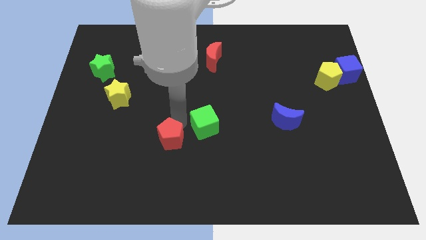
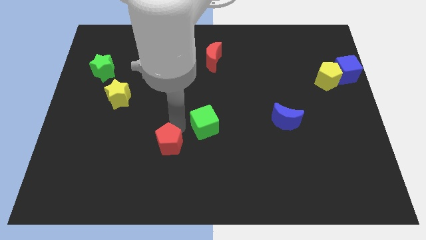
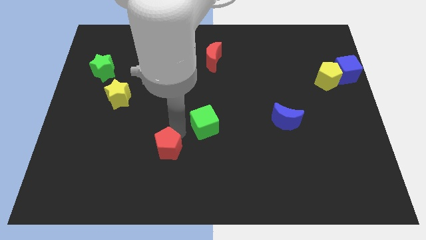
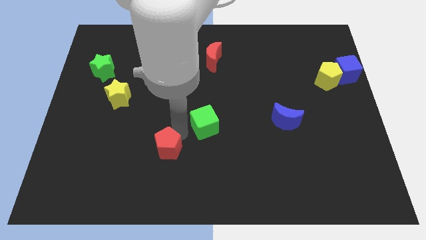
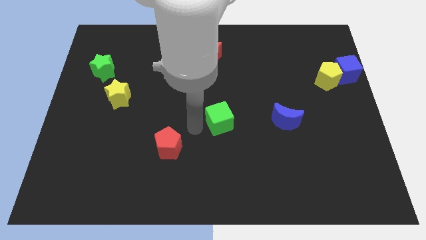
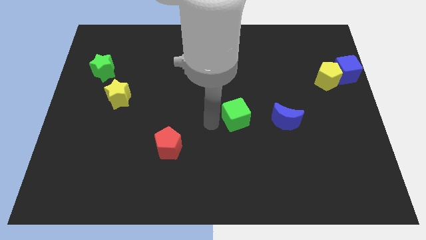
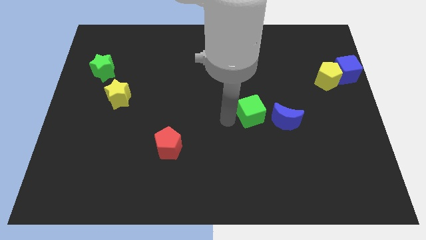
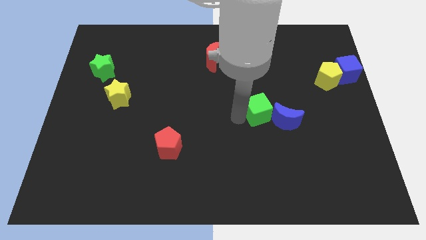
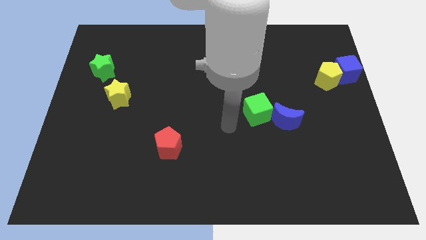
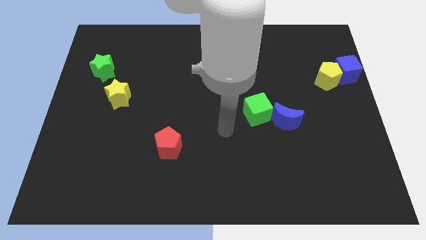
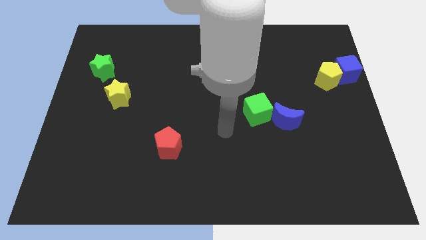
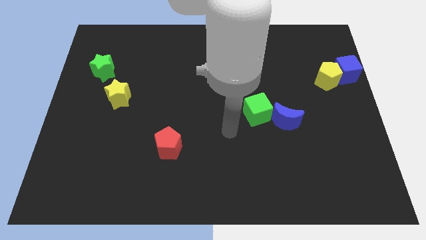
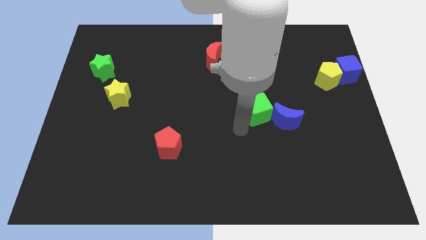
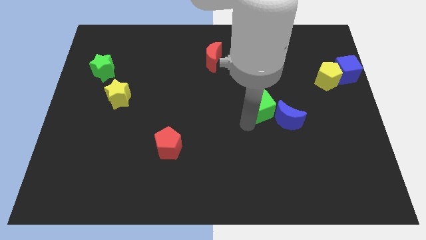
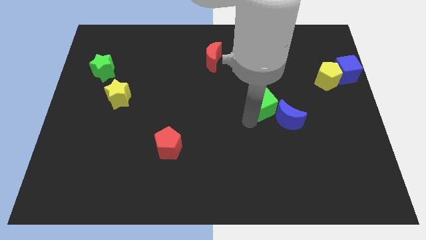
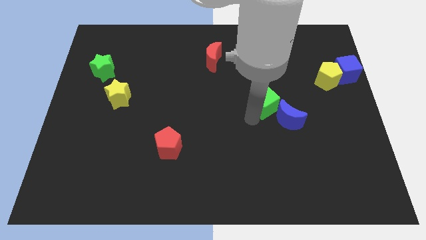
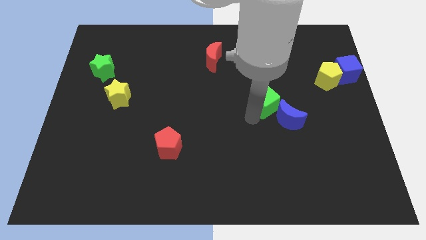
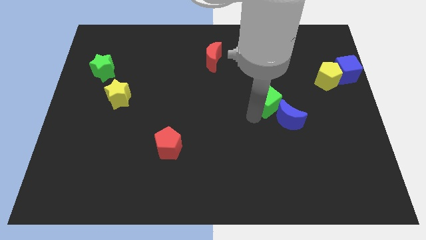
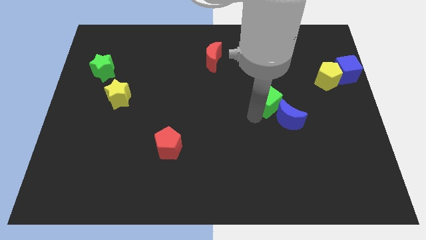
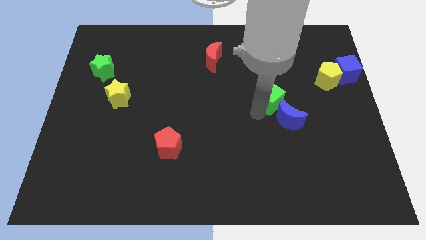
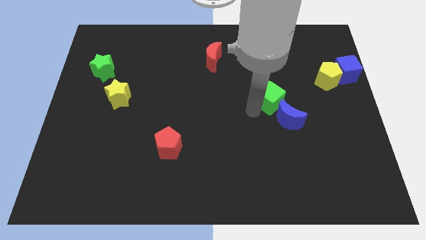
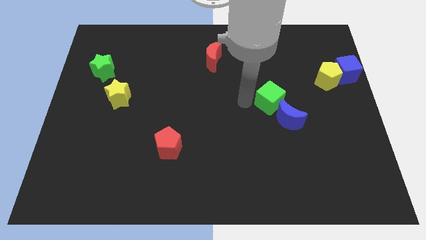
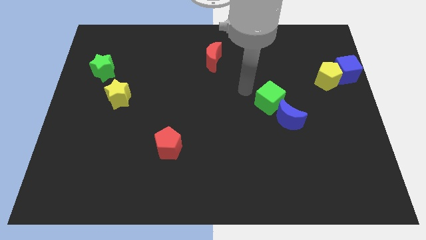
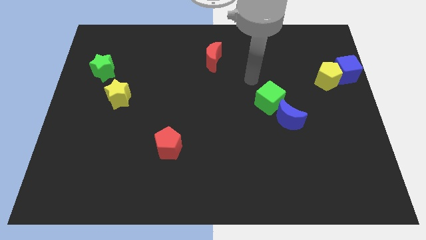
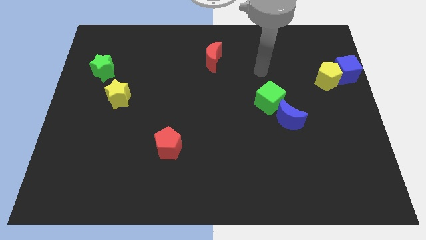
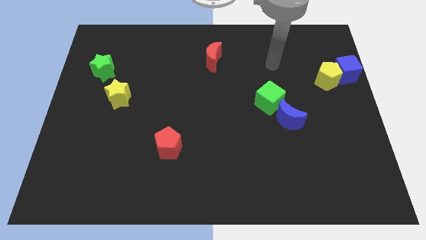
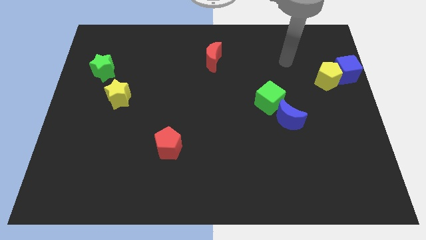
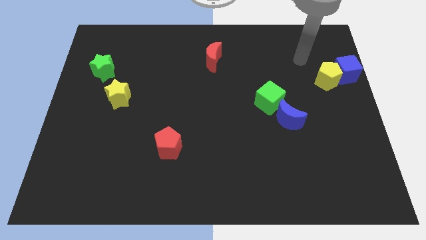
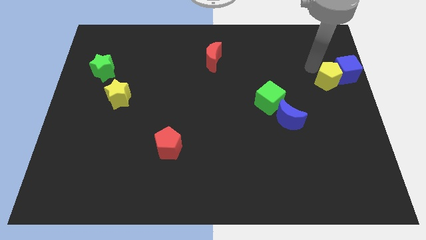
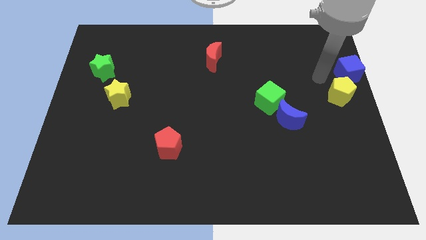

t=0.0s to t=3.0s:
push the green cube to the top of the blue crescent

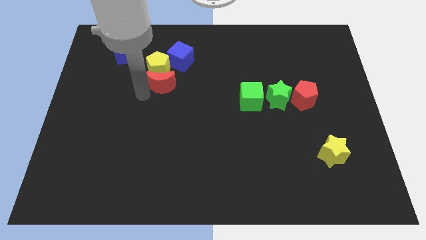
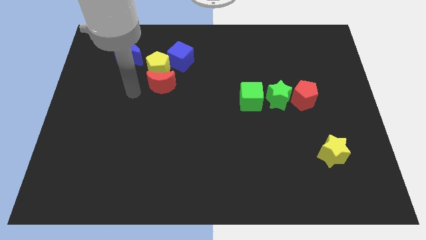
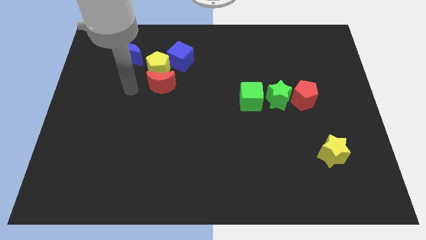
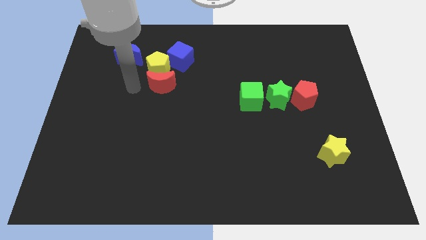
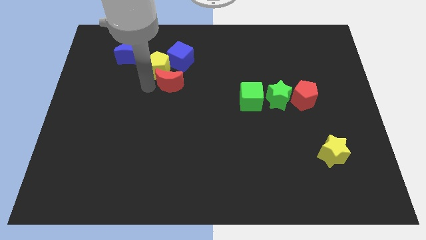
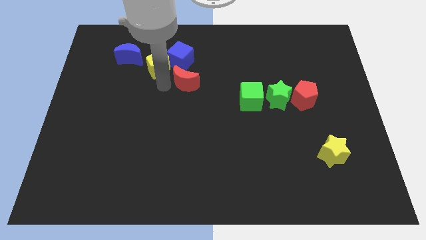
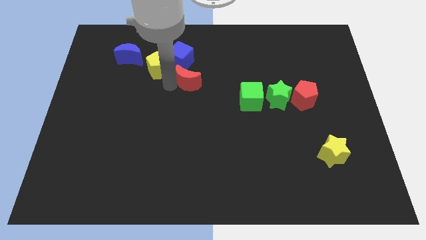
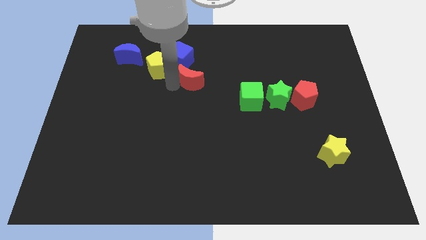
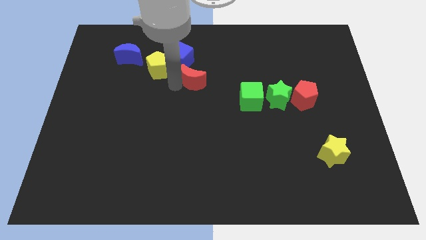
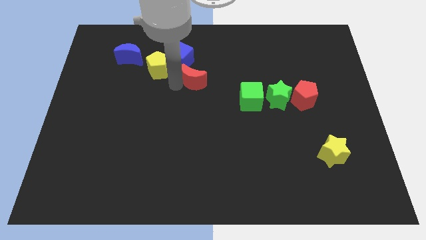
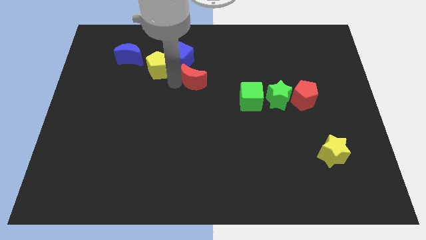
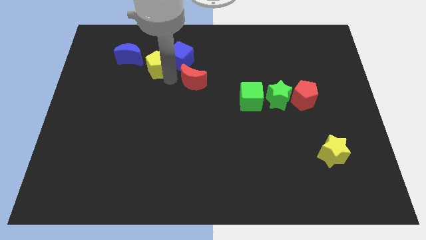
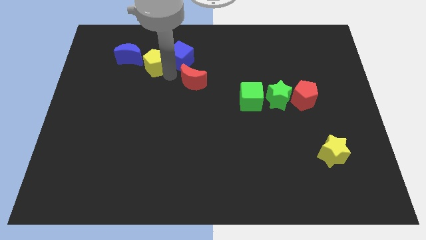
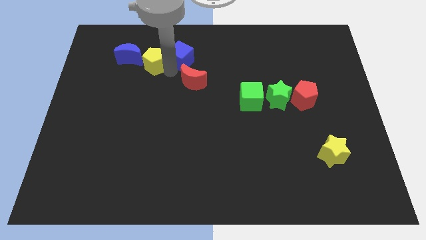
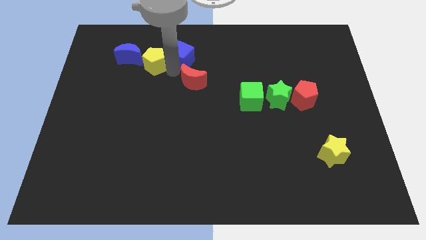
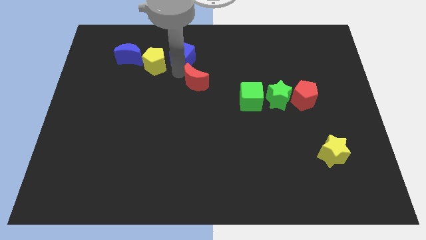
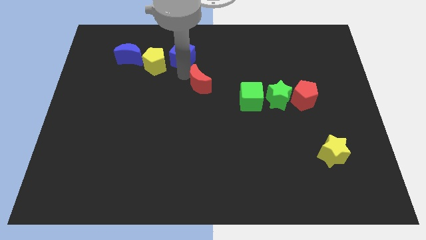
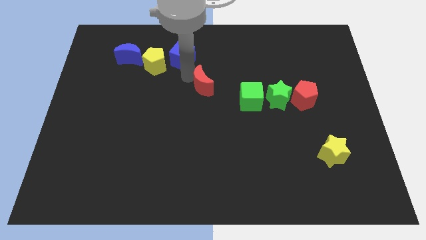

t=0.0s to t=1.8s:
separate the red moon and the yellow pentagon from each other

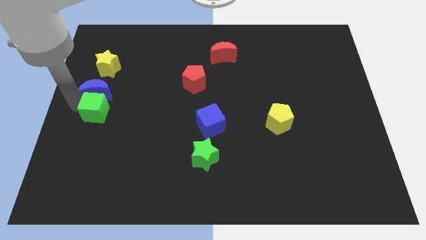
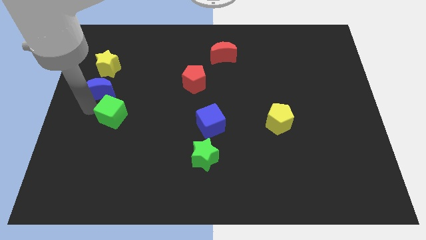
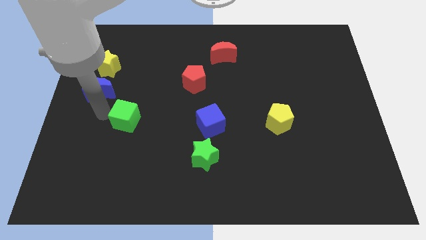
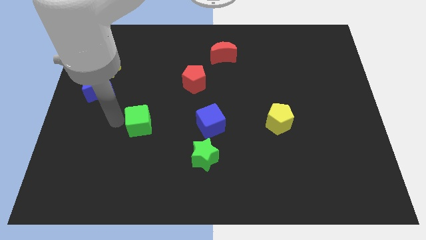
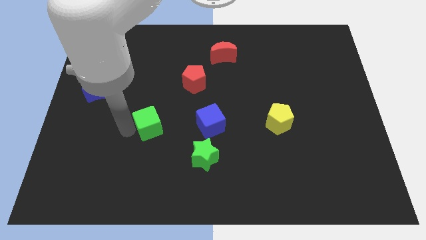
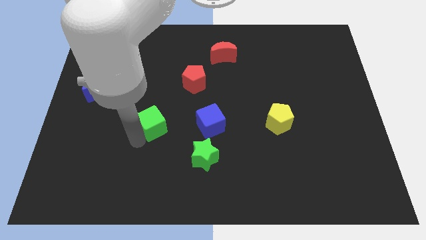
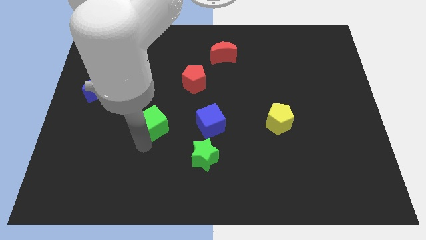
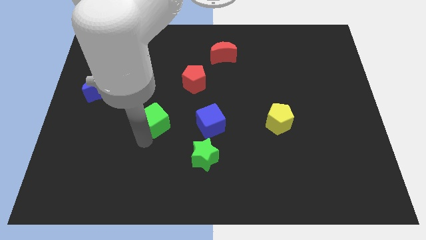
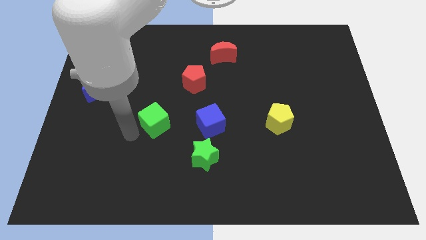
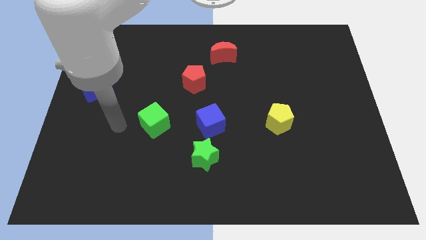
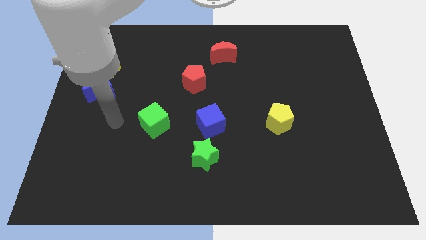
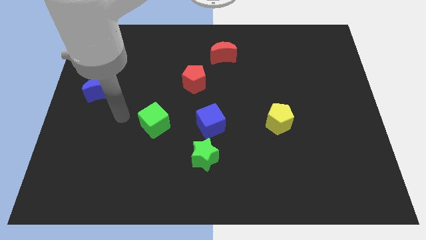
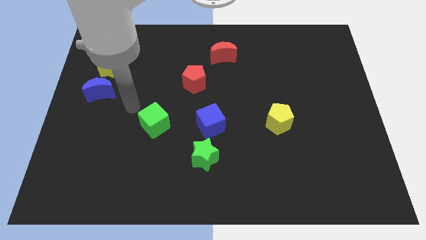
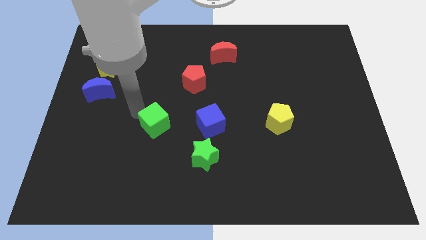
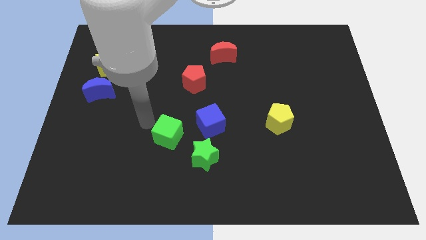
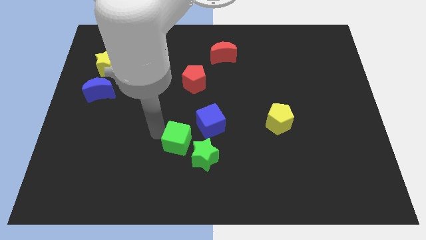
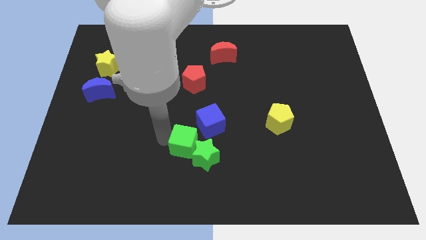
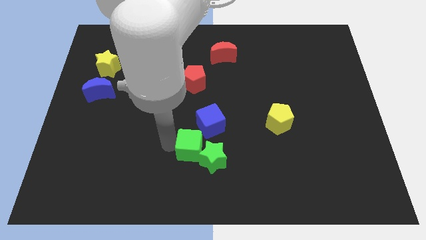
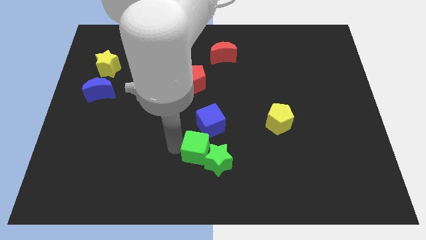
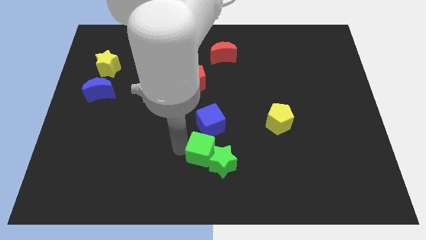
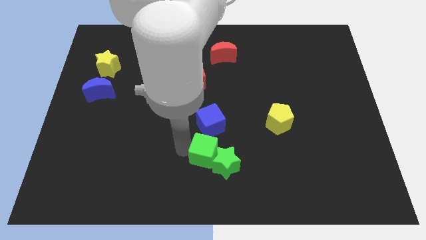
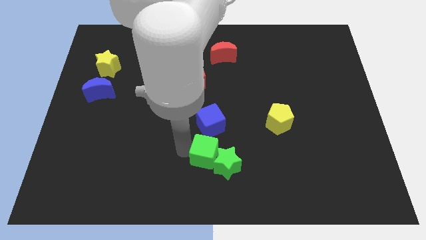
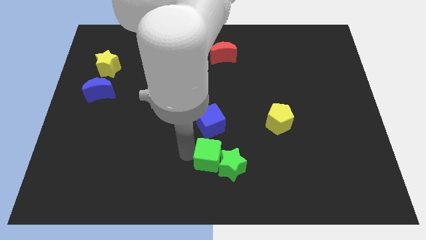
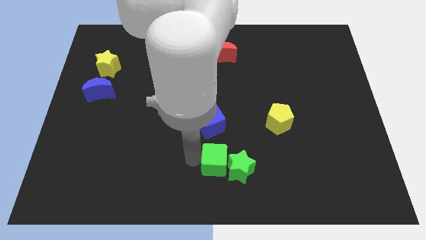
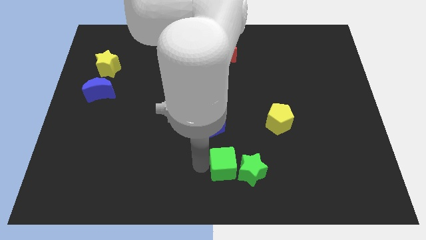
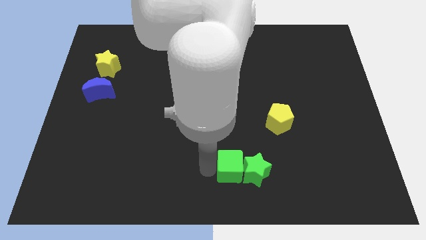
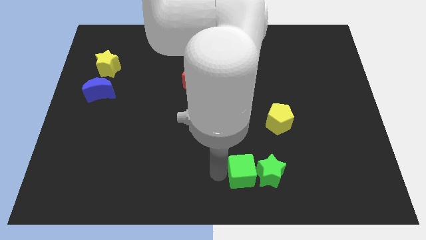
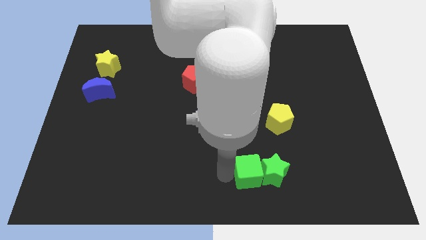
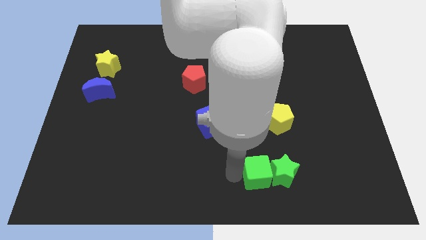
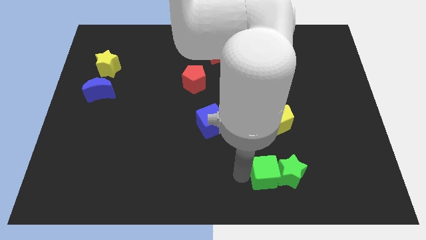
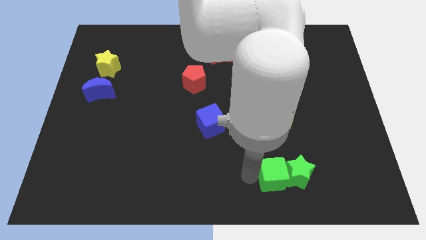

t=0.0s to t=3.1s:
push the green cube into the green star

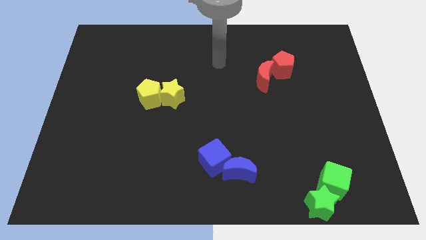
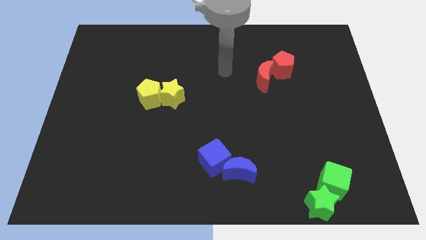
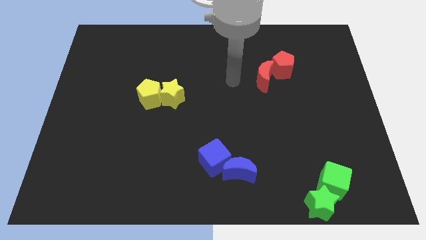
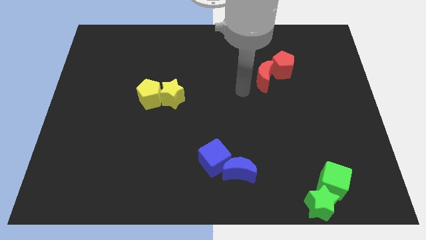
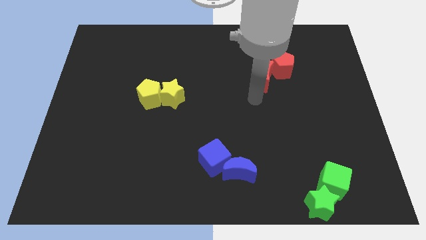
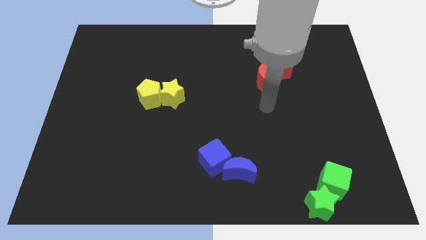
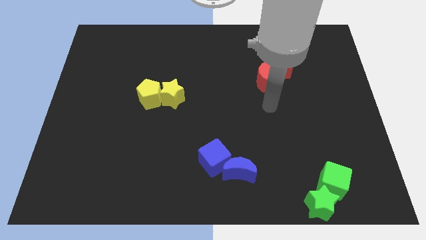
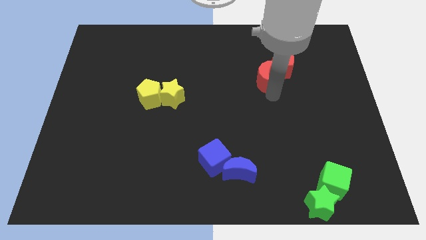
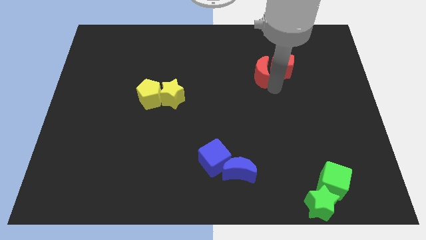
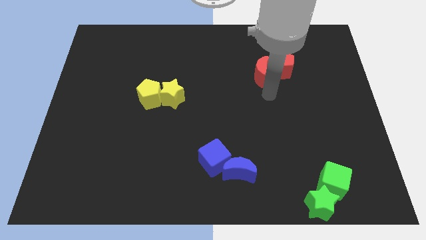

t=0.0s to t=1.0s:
move your arm towards the red crescent
